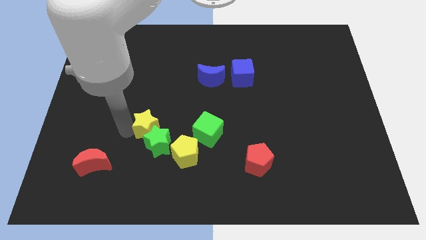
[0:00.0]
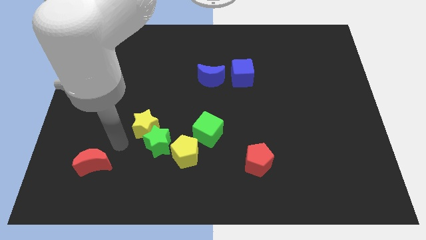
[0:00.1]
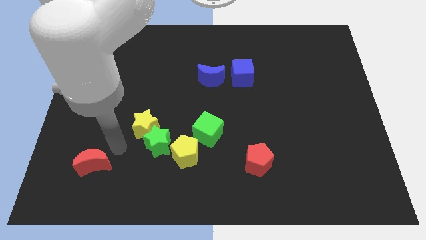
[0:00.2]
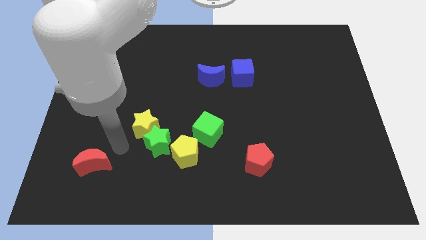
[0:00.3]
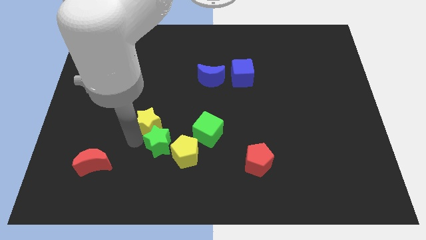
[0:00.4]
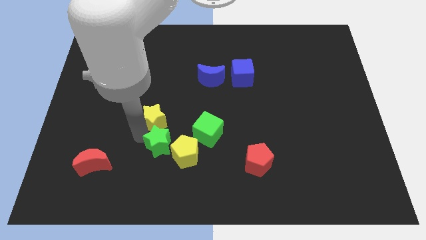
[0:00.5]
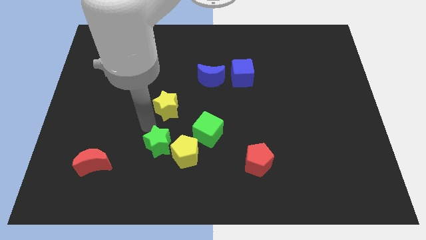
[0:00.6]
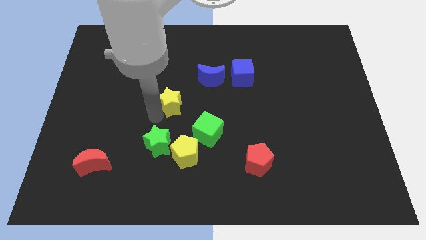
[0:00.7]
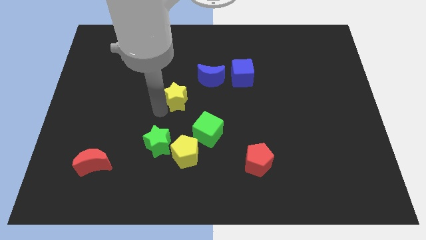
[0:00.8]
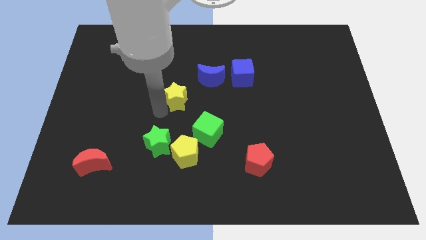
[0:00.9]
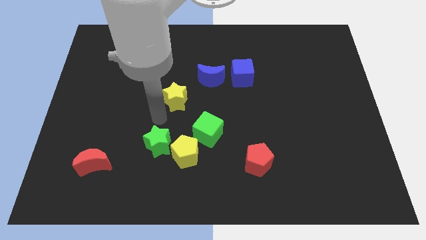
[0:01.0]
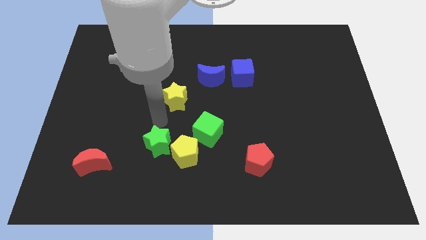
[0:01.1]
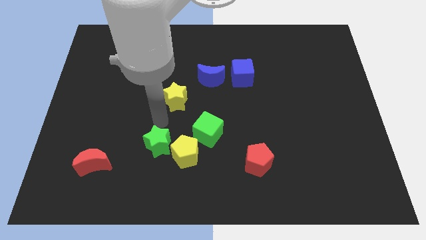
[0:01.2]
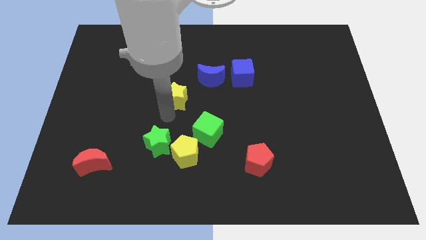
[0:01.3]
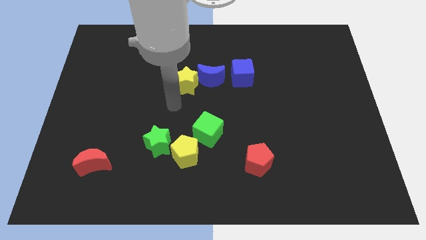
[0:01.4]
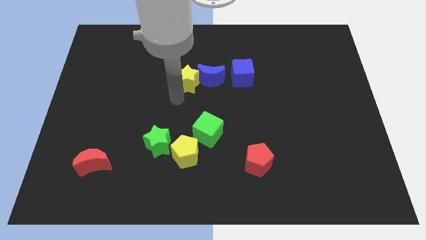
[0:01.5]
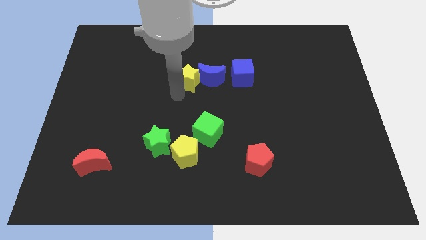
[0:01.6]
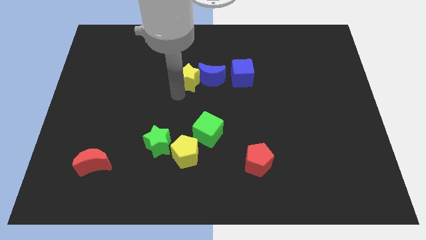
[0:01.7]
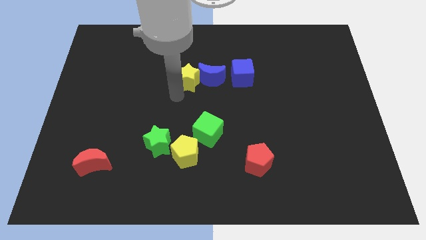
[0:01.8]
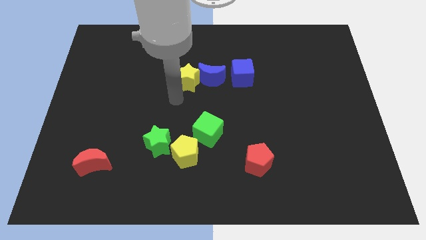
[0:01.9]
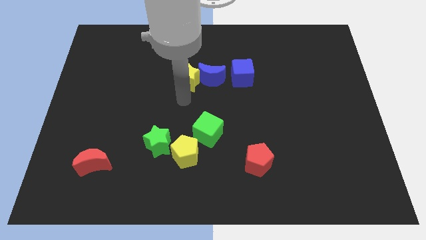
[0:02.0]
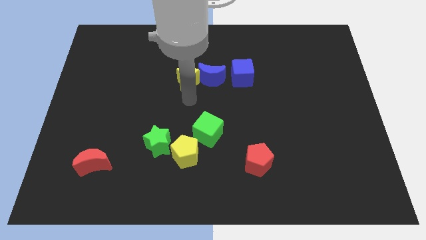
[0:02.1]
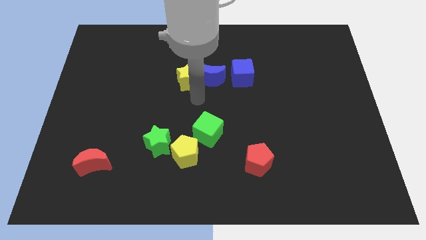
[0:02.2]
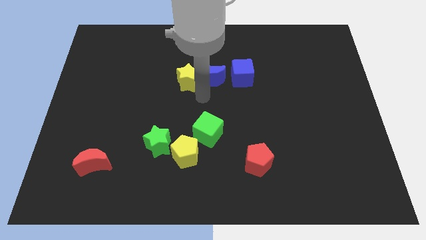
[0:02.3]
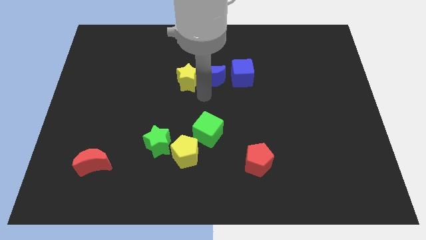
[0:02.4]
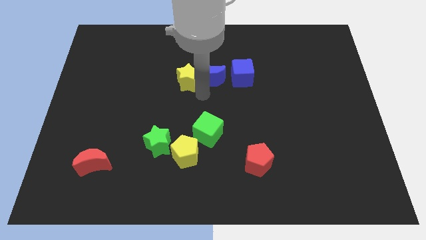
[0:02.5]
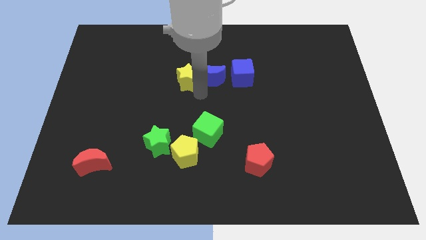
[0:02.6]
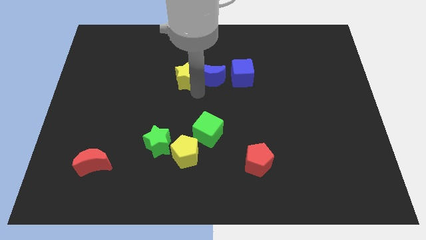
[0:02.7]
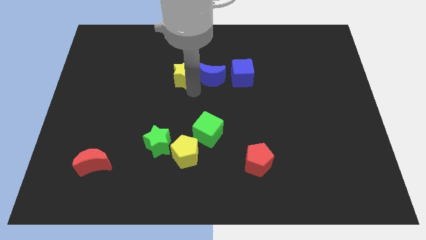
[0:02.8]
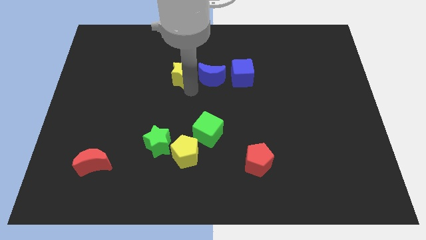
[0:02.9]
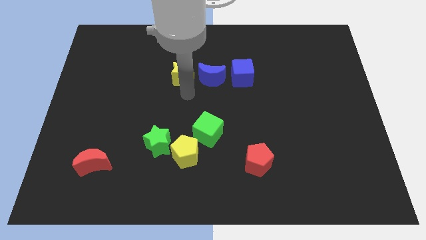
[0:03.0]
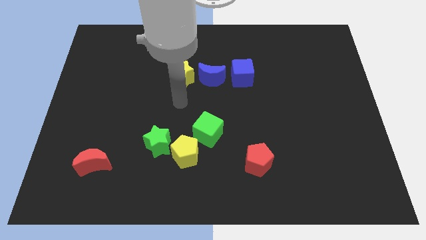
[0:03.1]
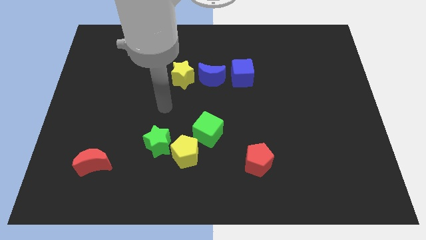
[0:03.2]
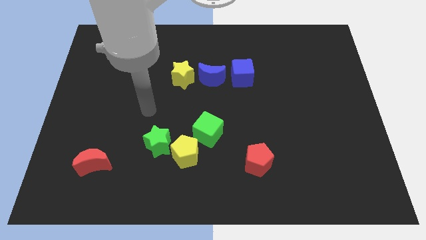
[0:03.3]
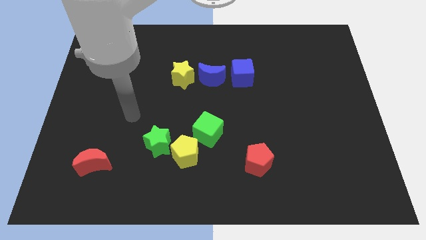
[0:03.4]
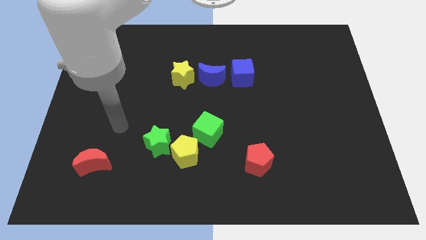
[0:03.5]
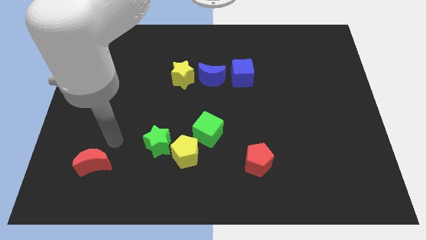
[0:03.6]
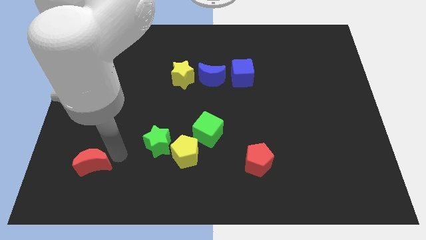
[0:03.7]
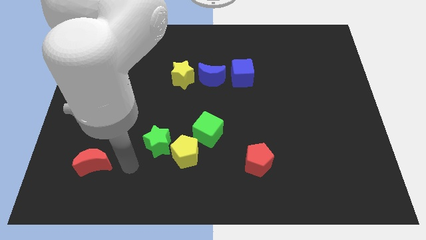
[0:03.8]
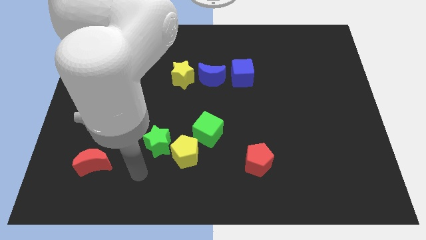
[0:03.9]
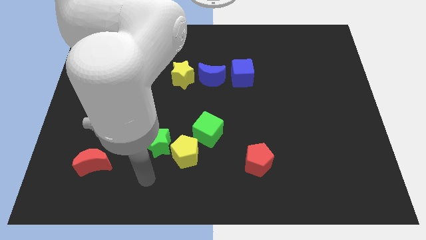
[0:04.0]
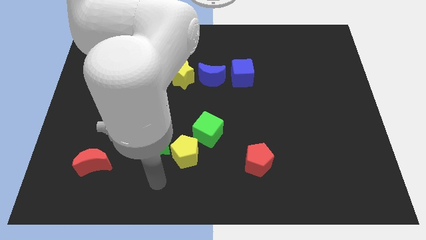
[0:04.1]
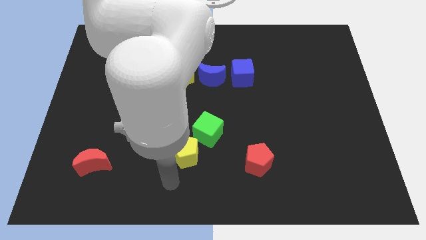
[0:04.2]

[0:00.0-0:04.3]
place yellow star to the left of blue moon

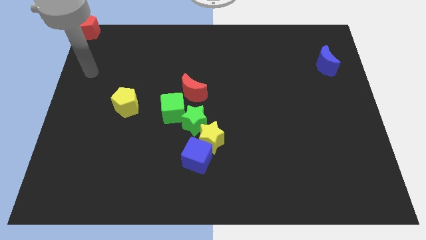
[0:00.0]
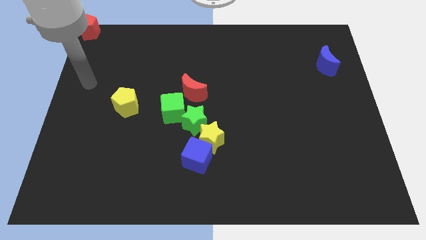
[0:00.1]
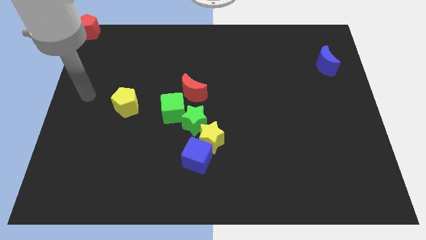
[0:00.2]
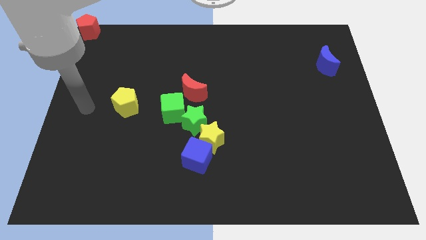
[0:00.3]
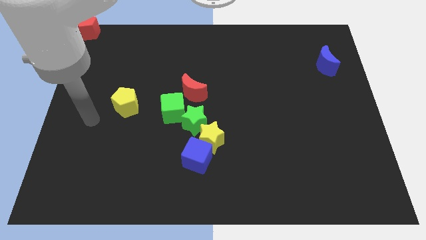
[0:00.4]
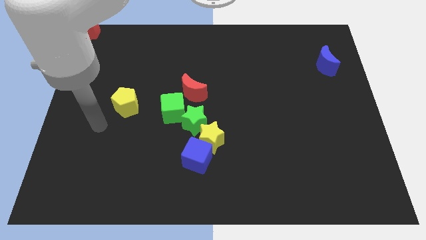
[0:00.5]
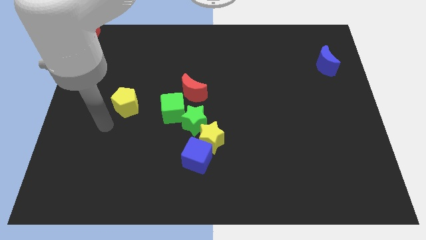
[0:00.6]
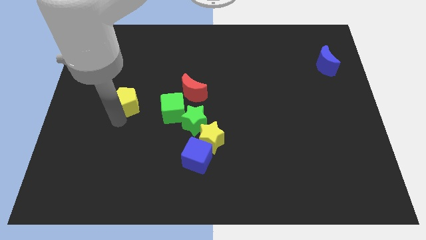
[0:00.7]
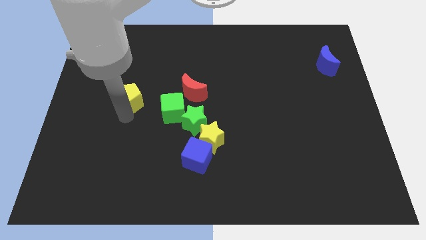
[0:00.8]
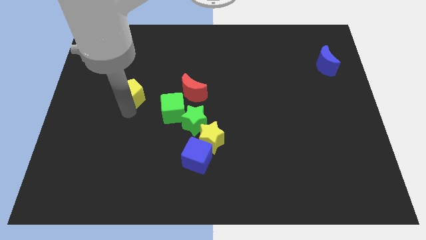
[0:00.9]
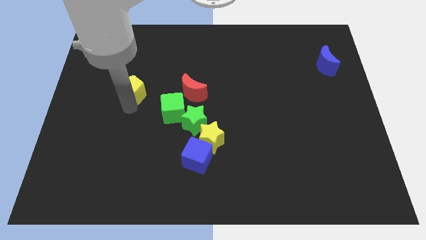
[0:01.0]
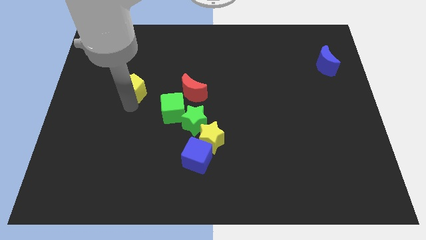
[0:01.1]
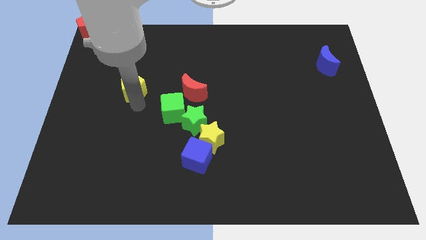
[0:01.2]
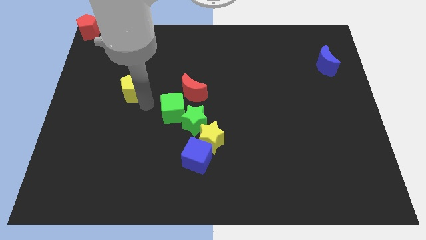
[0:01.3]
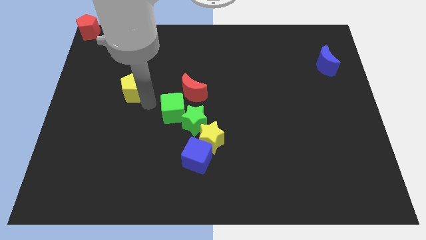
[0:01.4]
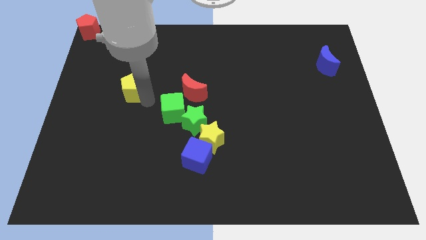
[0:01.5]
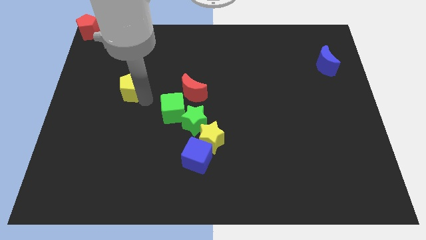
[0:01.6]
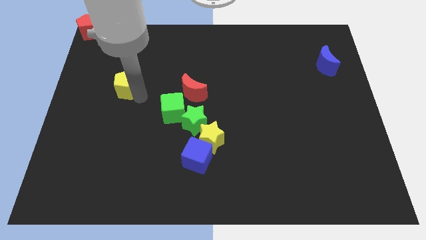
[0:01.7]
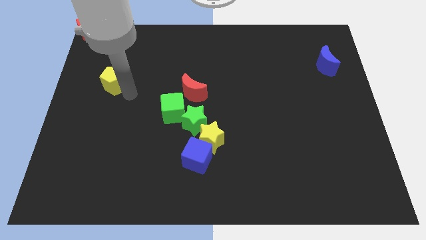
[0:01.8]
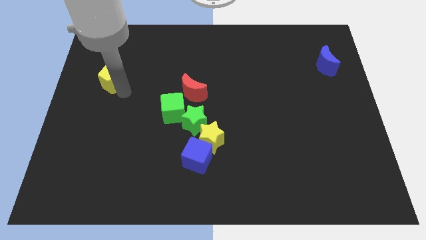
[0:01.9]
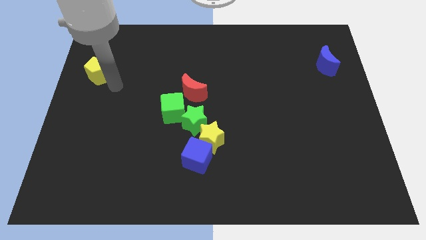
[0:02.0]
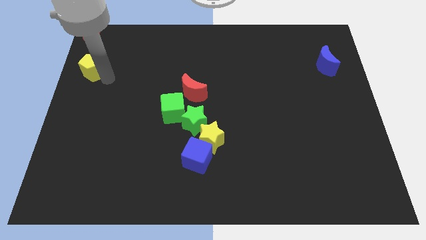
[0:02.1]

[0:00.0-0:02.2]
place the yellow pentagon below the red pentagon

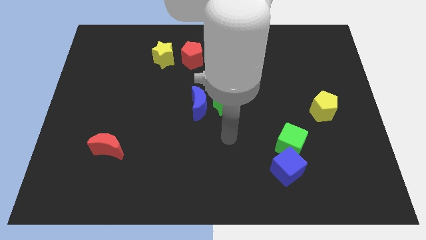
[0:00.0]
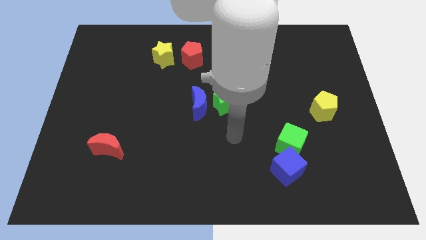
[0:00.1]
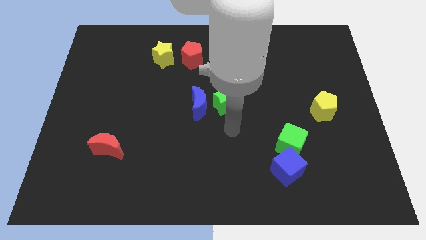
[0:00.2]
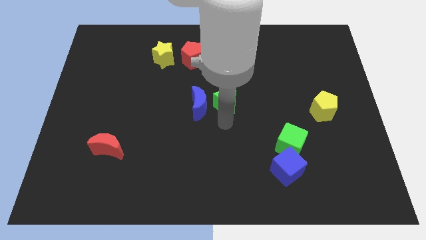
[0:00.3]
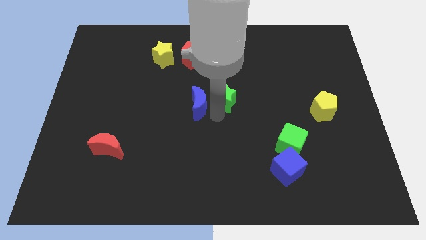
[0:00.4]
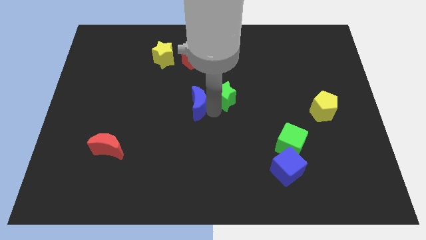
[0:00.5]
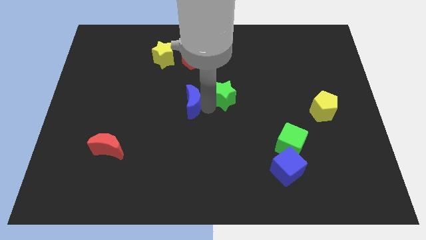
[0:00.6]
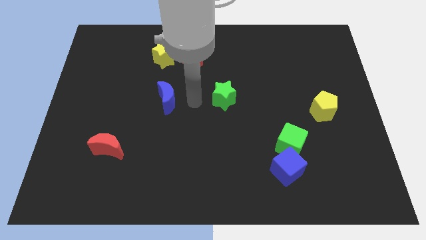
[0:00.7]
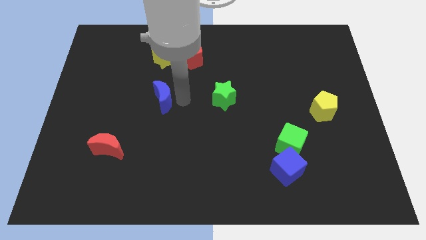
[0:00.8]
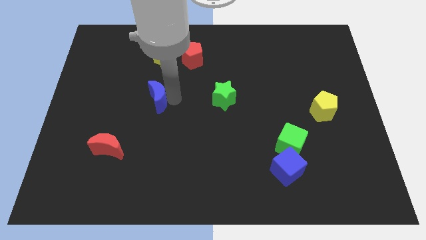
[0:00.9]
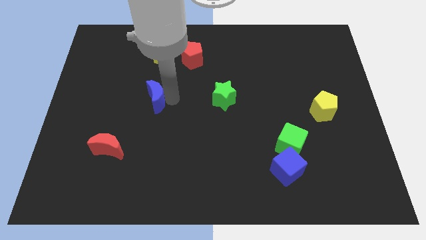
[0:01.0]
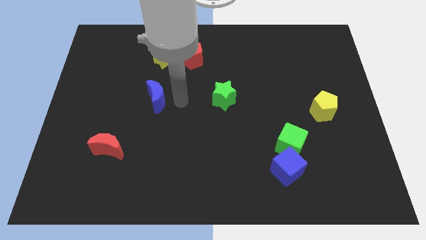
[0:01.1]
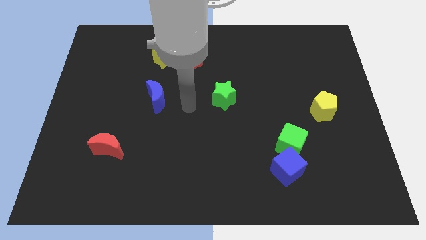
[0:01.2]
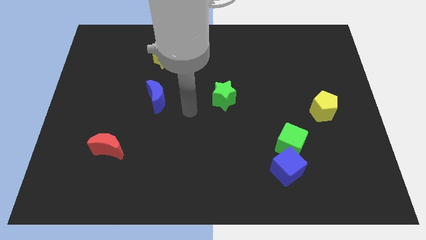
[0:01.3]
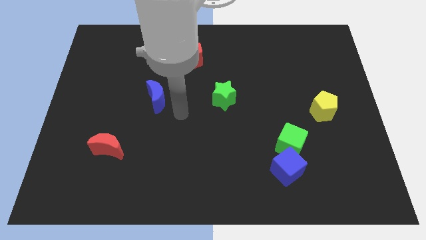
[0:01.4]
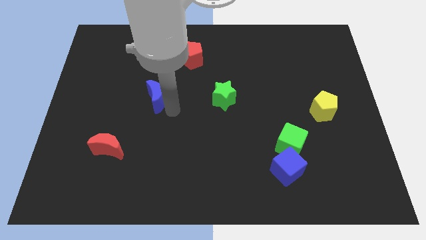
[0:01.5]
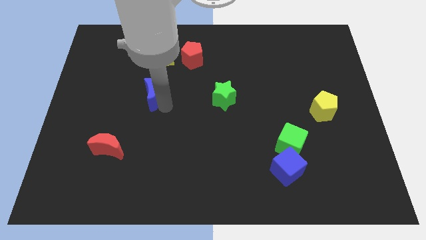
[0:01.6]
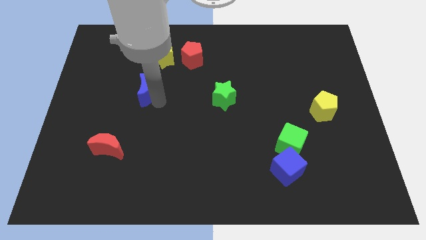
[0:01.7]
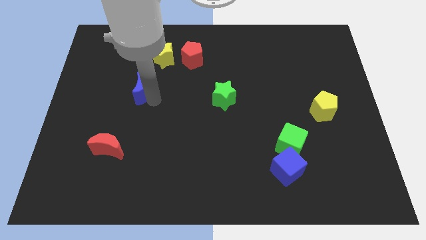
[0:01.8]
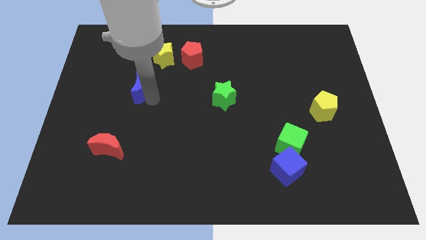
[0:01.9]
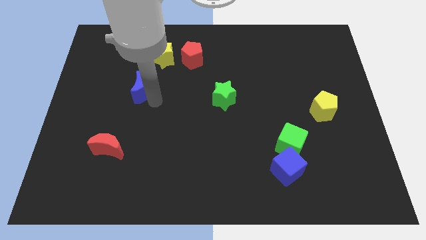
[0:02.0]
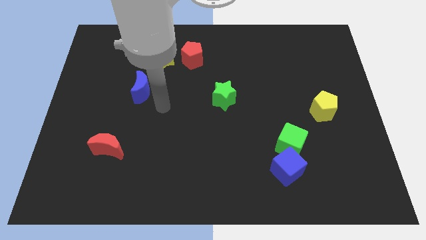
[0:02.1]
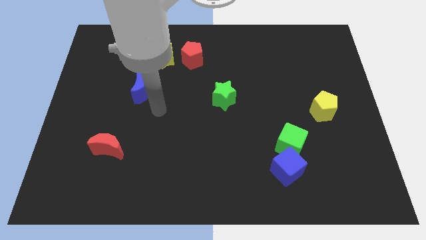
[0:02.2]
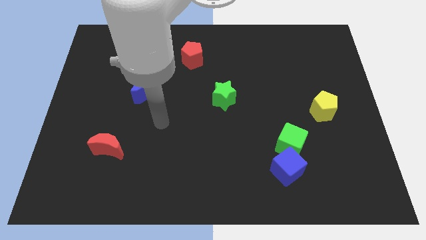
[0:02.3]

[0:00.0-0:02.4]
place the blue crescent in between the yellow star and the red crescent
